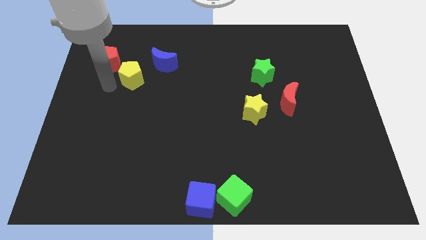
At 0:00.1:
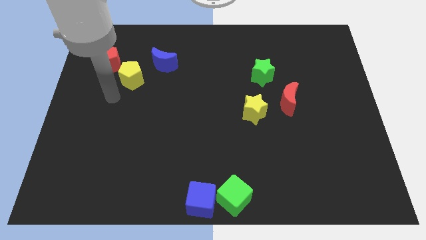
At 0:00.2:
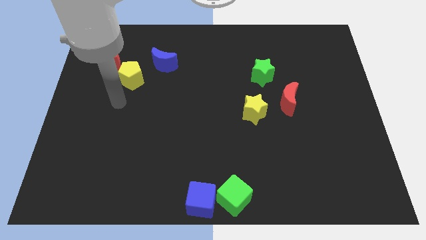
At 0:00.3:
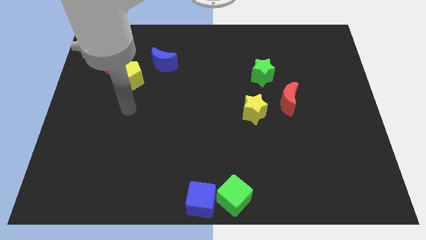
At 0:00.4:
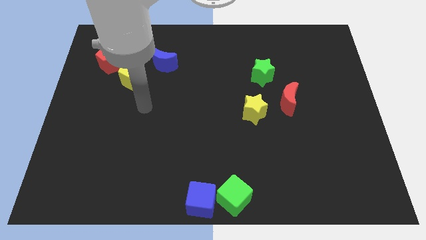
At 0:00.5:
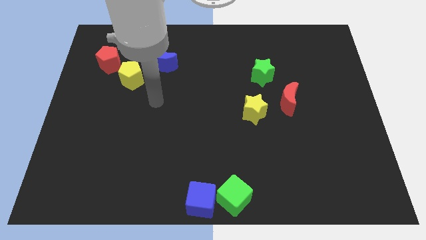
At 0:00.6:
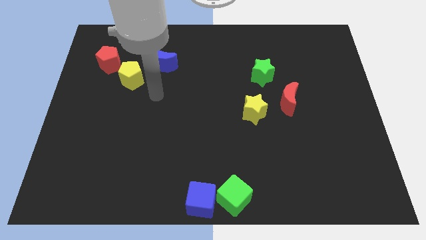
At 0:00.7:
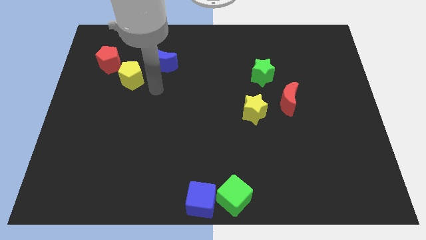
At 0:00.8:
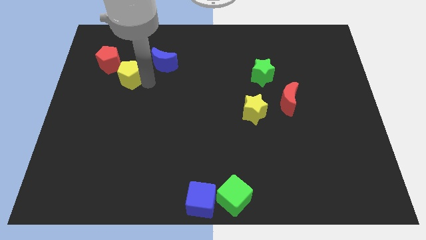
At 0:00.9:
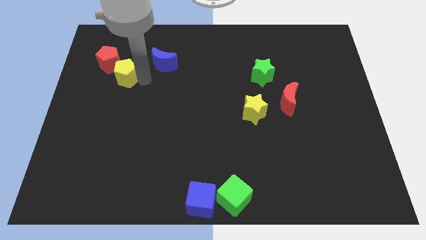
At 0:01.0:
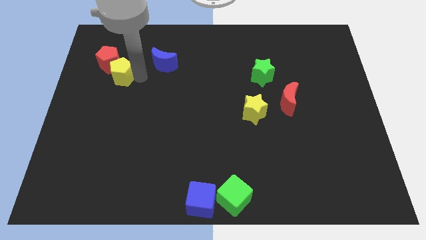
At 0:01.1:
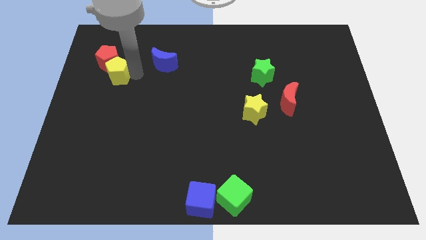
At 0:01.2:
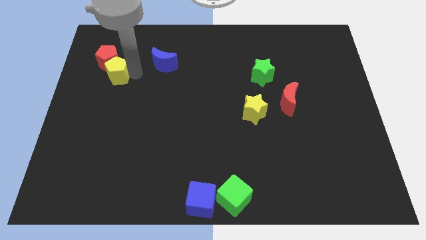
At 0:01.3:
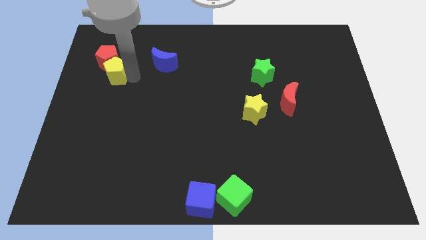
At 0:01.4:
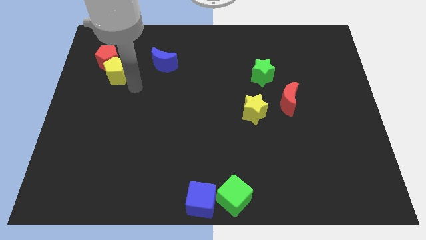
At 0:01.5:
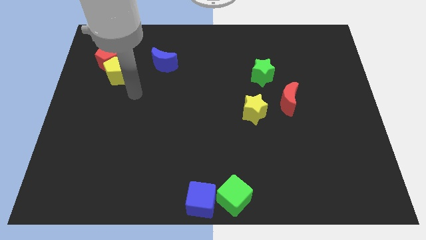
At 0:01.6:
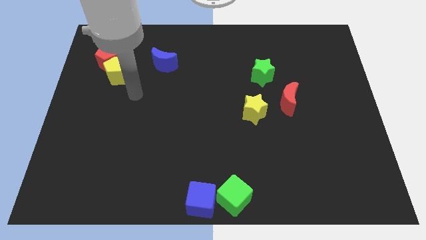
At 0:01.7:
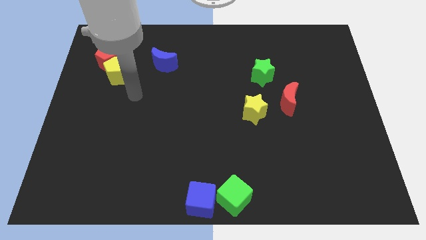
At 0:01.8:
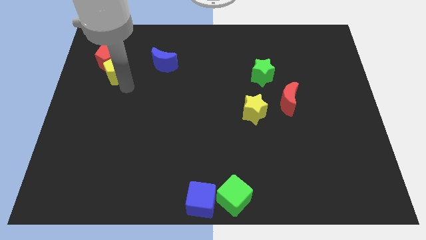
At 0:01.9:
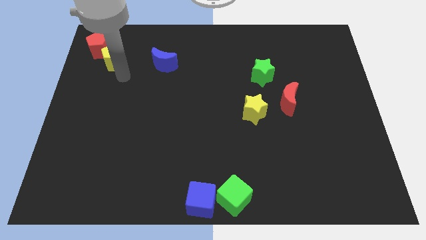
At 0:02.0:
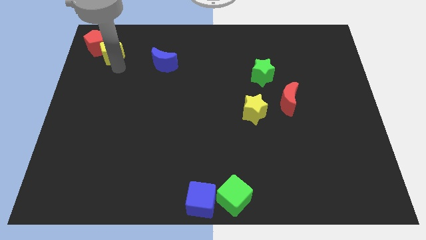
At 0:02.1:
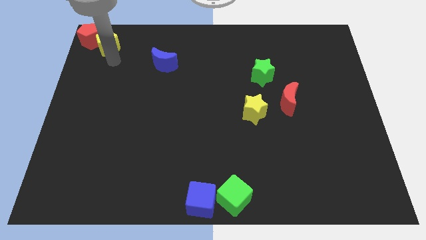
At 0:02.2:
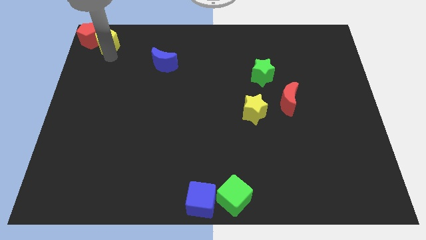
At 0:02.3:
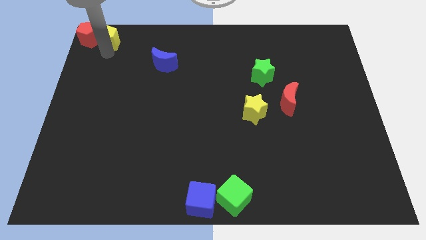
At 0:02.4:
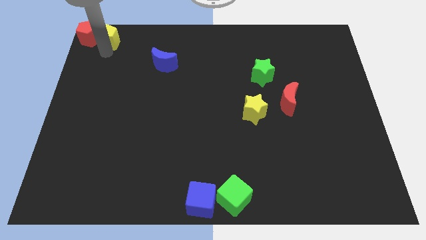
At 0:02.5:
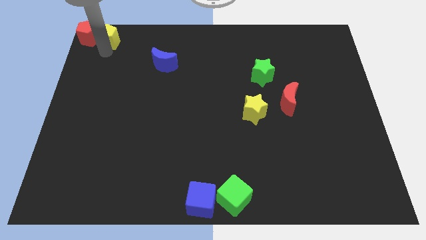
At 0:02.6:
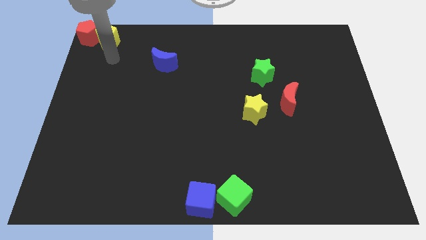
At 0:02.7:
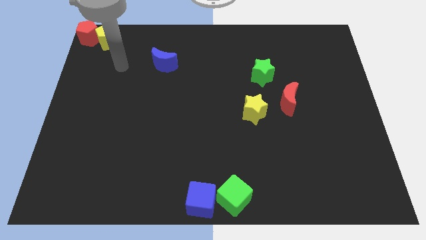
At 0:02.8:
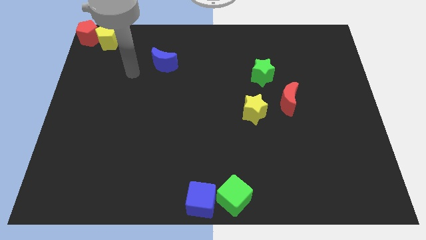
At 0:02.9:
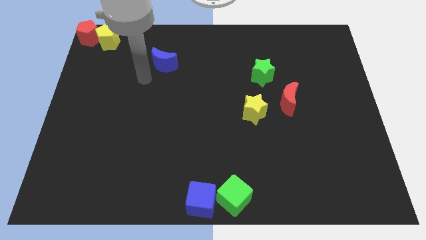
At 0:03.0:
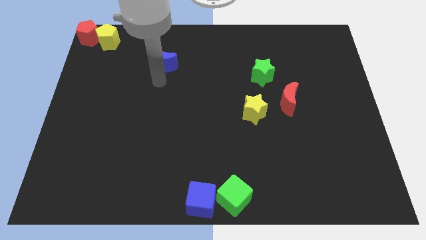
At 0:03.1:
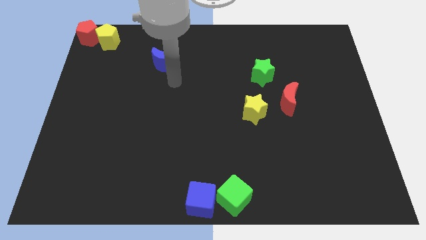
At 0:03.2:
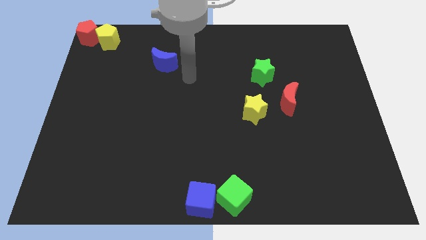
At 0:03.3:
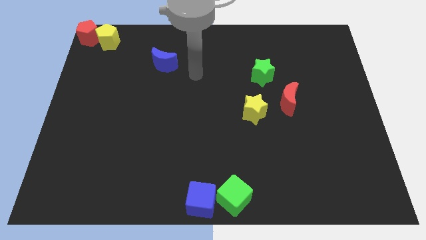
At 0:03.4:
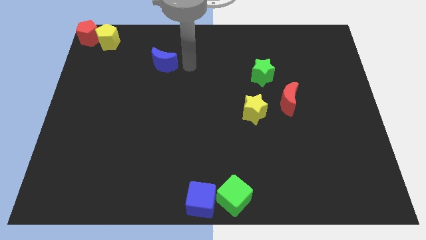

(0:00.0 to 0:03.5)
push the red pentagon along with the yellow pentagon to the top left corner

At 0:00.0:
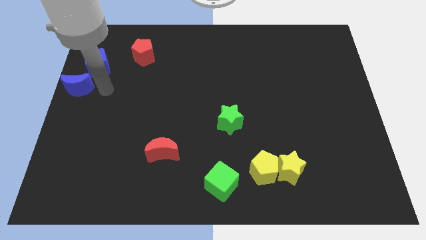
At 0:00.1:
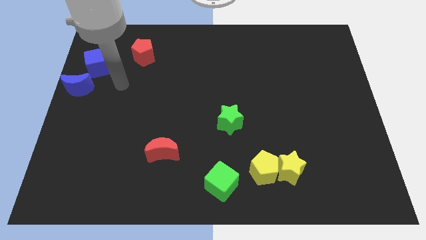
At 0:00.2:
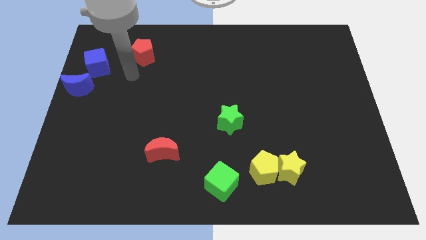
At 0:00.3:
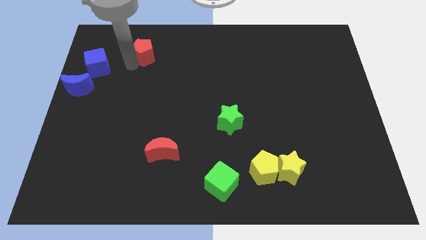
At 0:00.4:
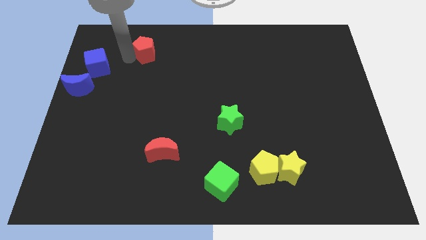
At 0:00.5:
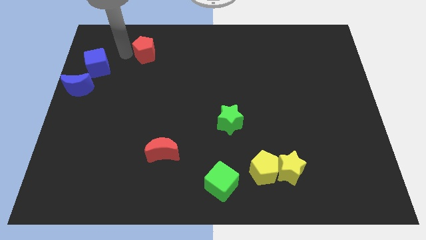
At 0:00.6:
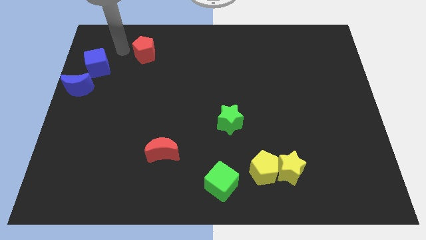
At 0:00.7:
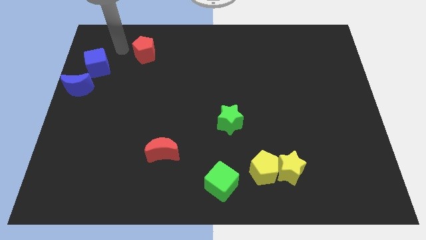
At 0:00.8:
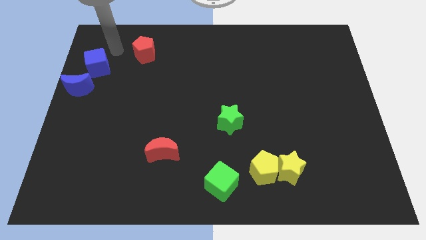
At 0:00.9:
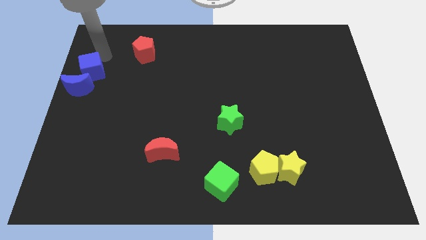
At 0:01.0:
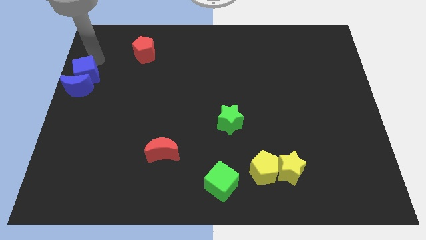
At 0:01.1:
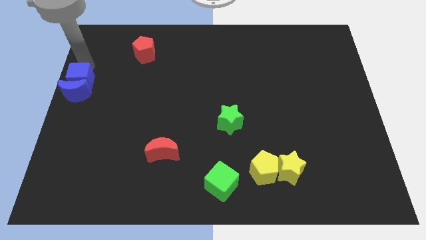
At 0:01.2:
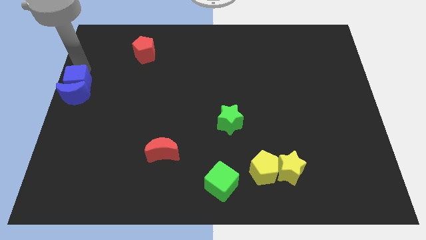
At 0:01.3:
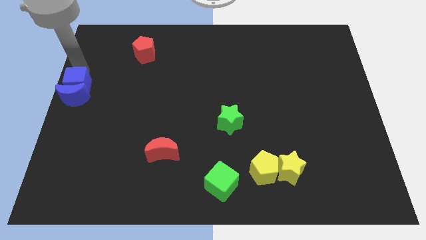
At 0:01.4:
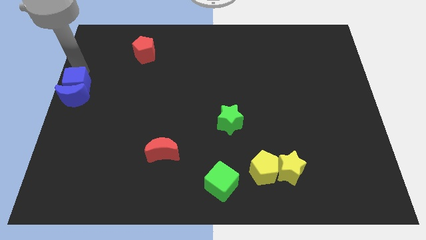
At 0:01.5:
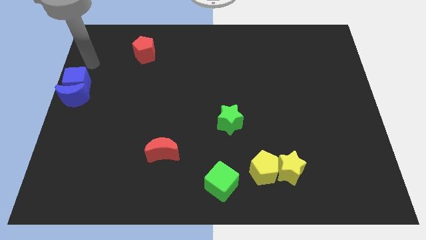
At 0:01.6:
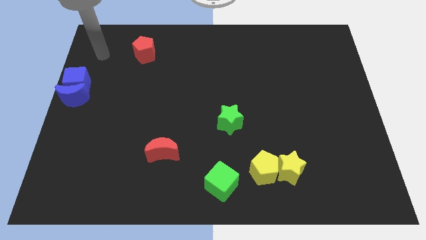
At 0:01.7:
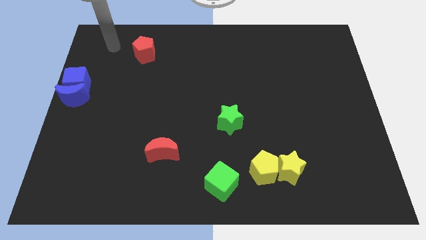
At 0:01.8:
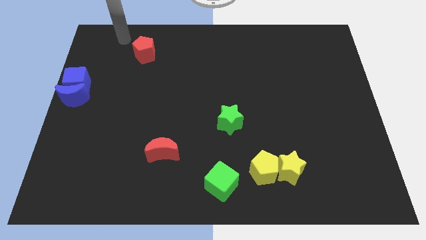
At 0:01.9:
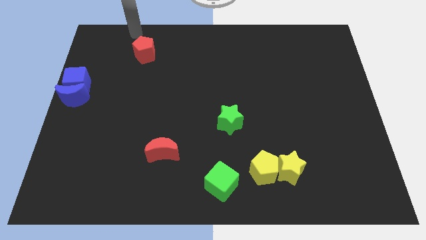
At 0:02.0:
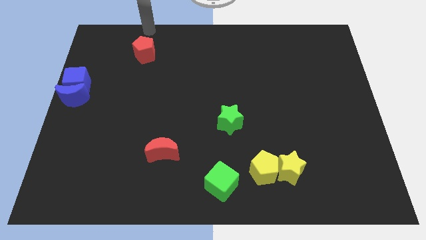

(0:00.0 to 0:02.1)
place the pointer at the top of the red pentagon

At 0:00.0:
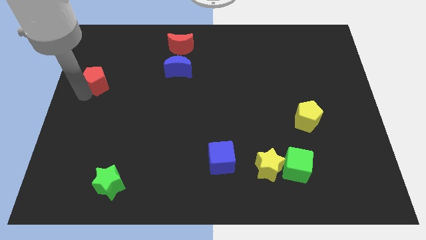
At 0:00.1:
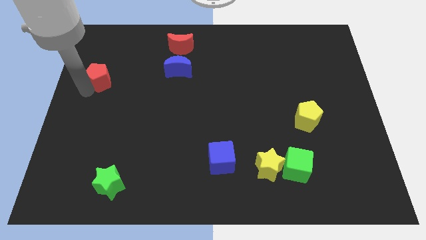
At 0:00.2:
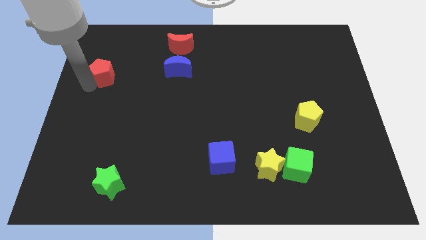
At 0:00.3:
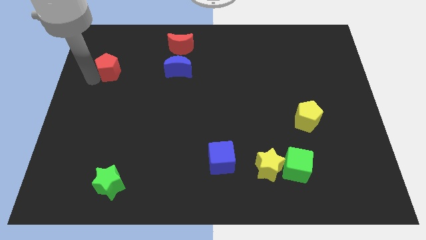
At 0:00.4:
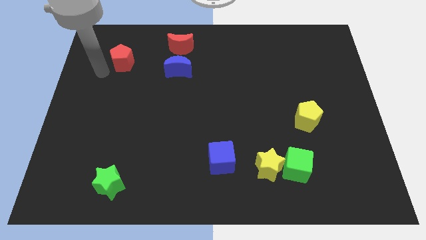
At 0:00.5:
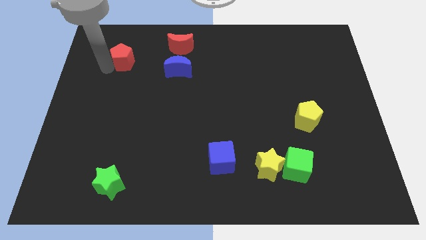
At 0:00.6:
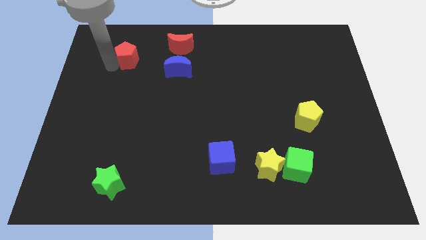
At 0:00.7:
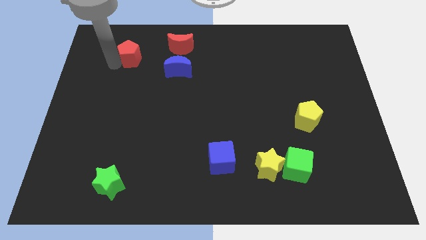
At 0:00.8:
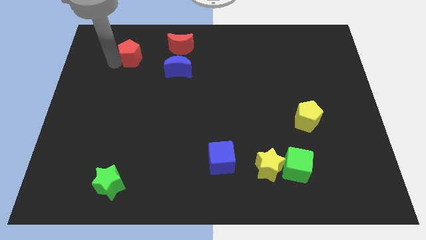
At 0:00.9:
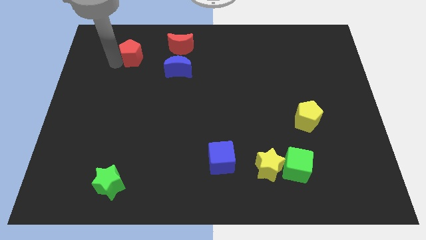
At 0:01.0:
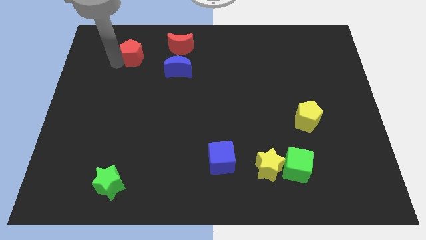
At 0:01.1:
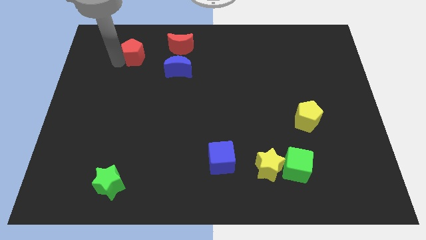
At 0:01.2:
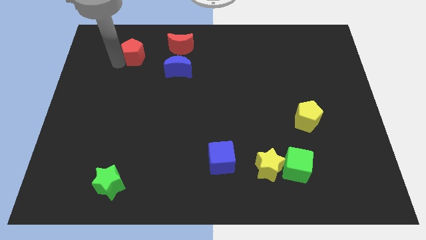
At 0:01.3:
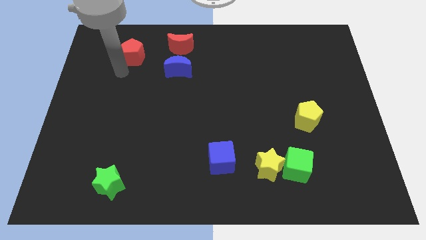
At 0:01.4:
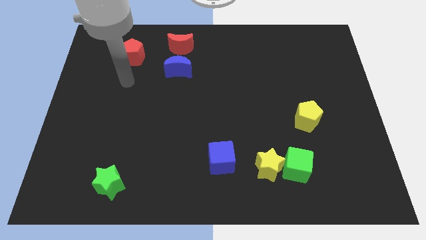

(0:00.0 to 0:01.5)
move the red pentagon to the top of the board

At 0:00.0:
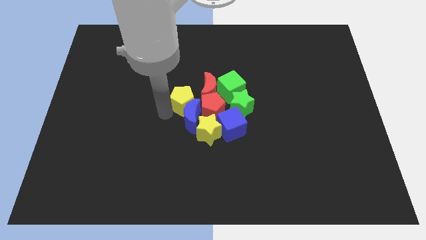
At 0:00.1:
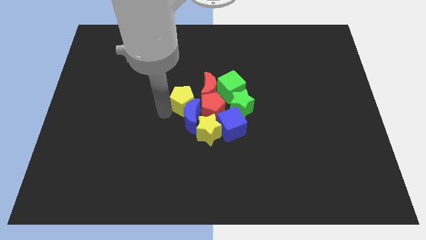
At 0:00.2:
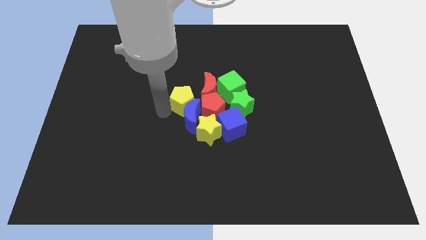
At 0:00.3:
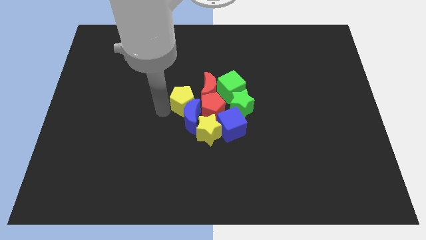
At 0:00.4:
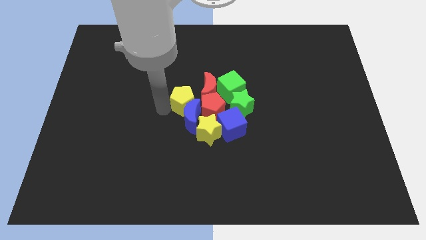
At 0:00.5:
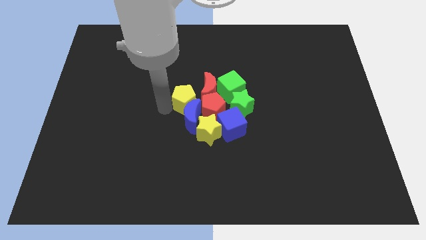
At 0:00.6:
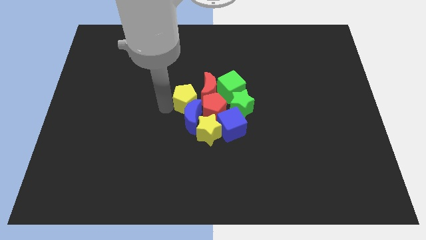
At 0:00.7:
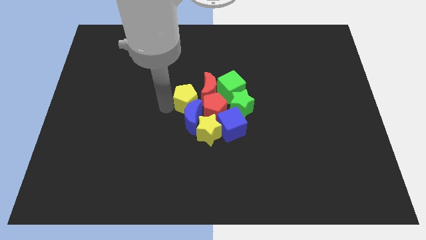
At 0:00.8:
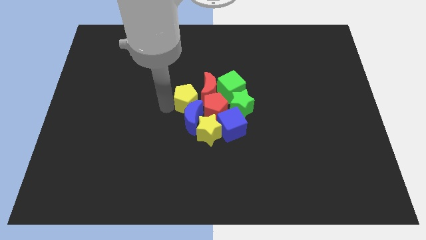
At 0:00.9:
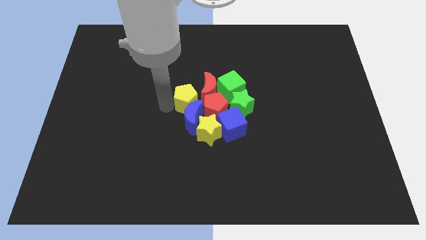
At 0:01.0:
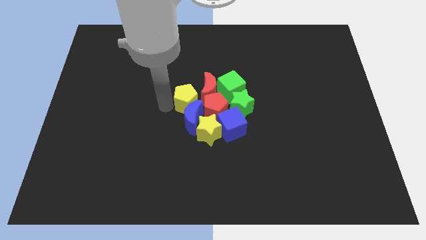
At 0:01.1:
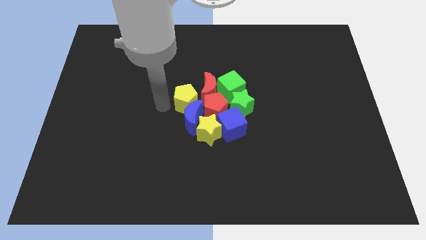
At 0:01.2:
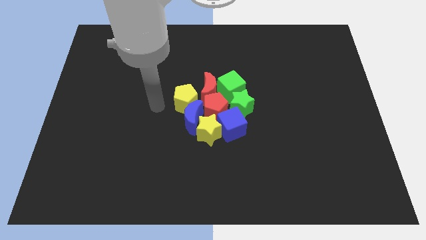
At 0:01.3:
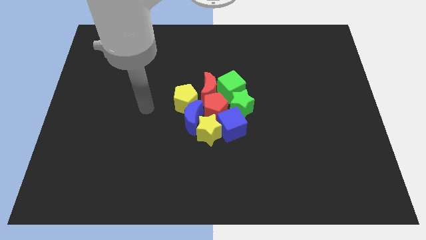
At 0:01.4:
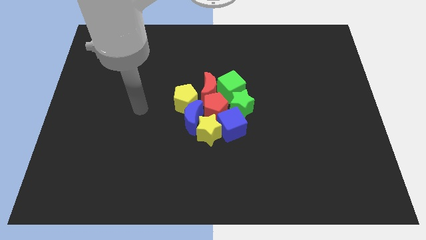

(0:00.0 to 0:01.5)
push the yellow pentagon into group of blocks

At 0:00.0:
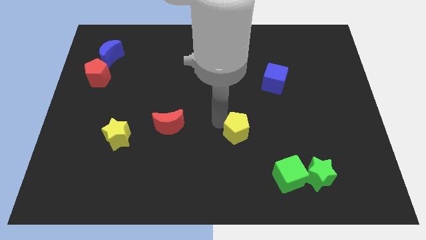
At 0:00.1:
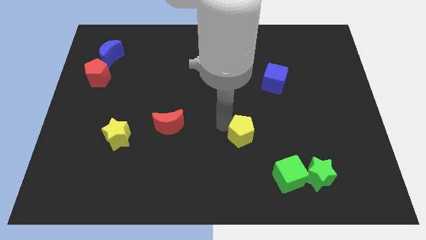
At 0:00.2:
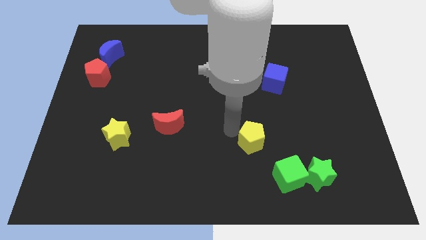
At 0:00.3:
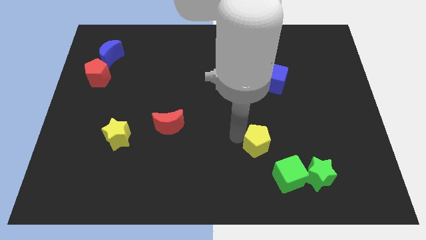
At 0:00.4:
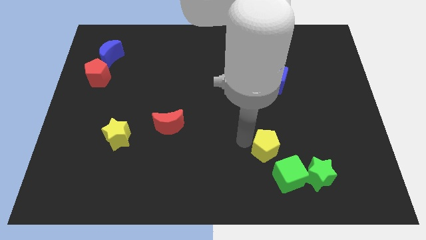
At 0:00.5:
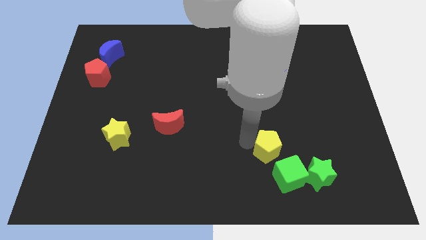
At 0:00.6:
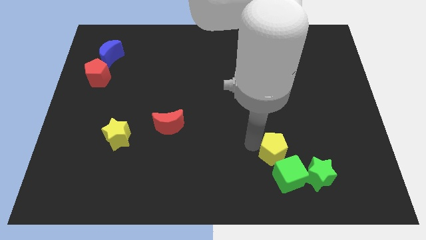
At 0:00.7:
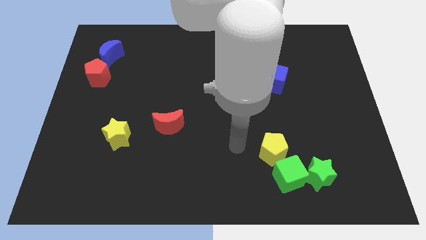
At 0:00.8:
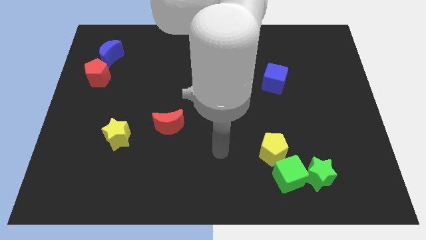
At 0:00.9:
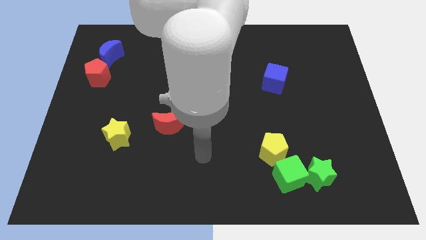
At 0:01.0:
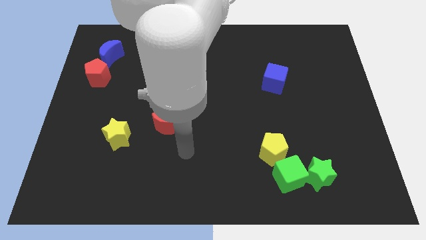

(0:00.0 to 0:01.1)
move yellow pentagon into green cube
